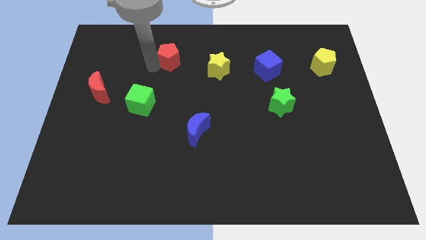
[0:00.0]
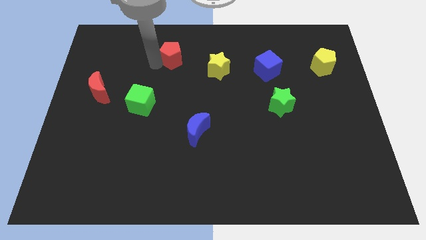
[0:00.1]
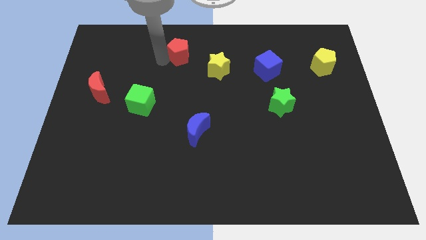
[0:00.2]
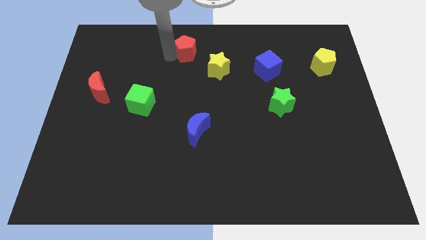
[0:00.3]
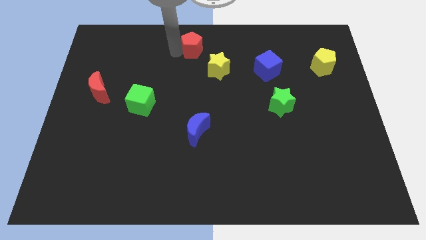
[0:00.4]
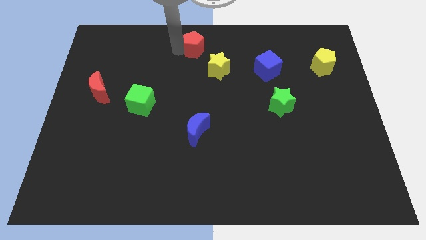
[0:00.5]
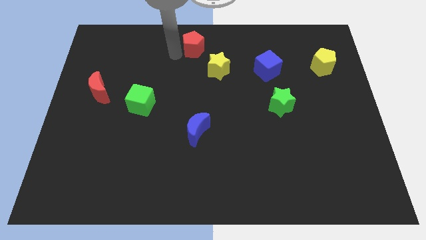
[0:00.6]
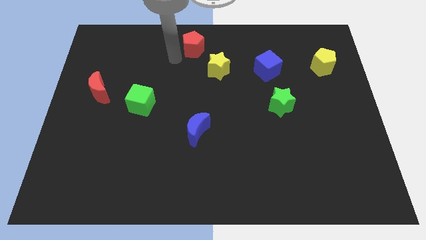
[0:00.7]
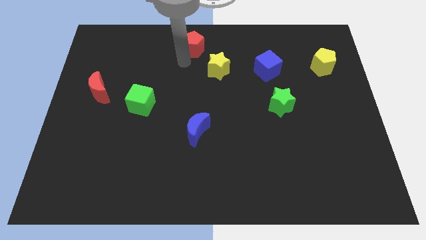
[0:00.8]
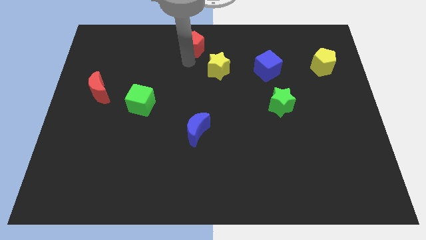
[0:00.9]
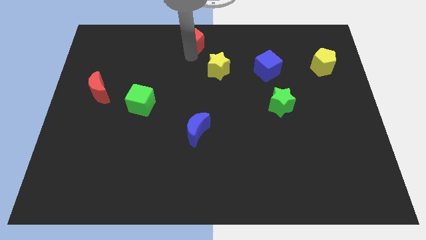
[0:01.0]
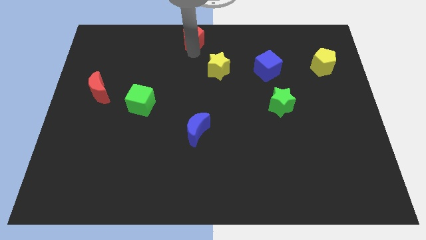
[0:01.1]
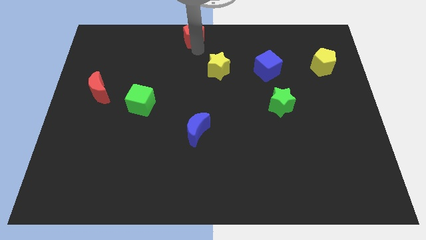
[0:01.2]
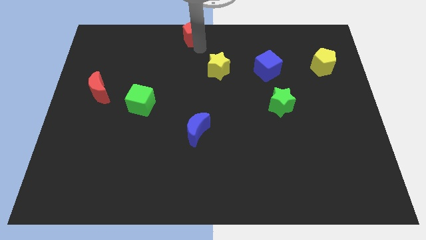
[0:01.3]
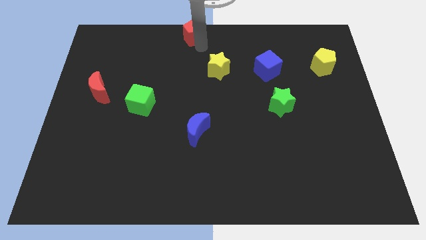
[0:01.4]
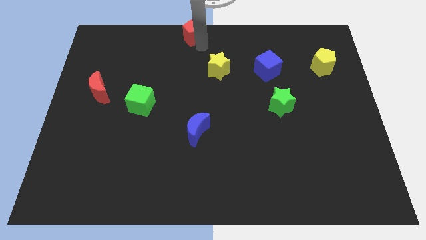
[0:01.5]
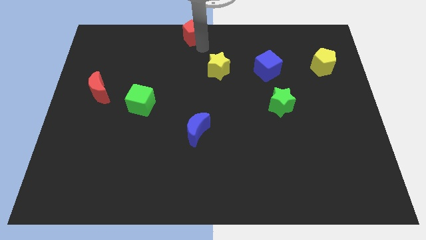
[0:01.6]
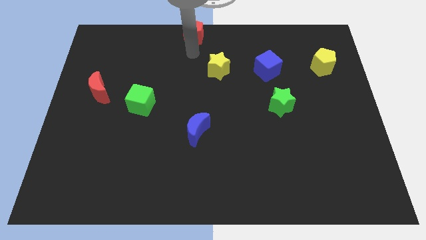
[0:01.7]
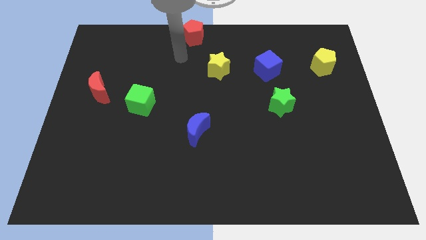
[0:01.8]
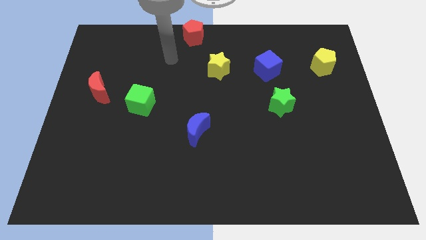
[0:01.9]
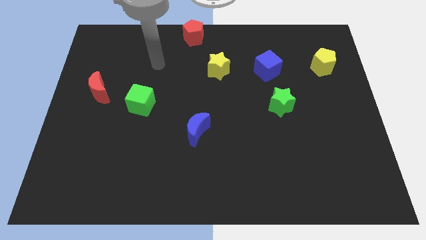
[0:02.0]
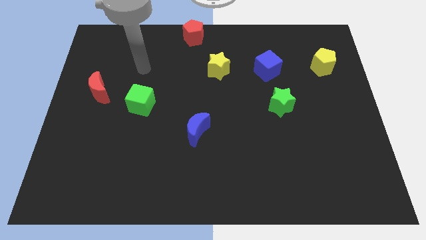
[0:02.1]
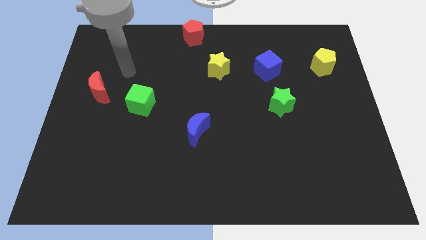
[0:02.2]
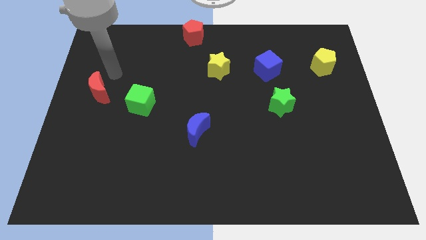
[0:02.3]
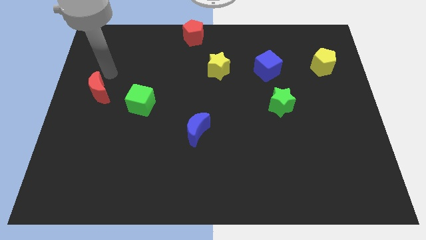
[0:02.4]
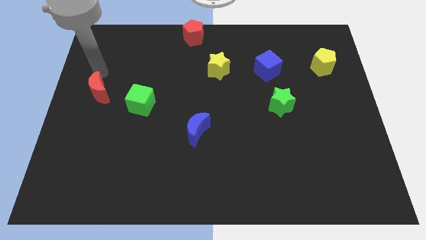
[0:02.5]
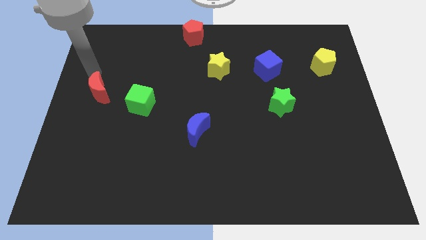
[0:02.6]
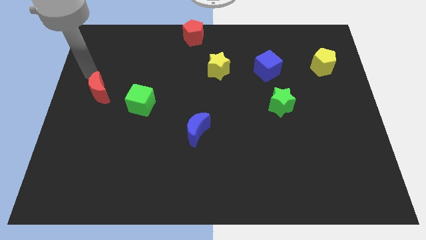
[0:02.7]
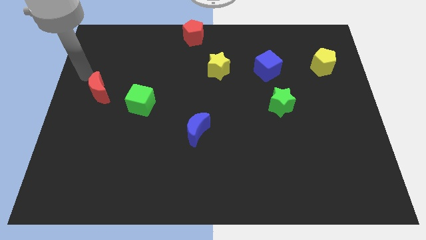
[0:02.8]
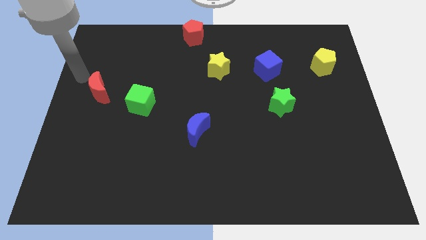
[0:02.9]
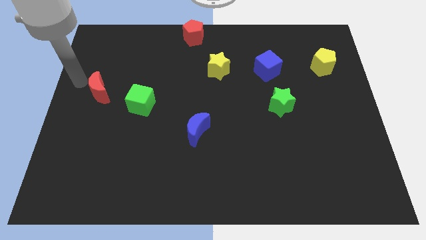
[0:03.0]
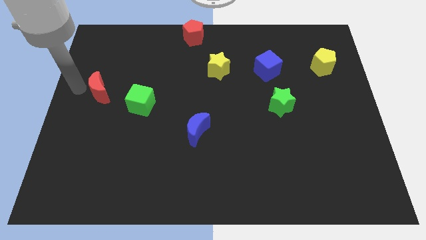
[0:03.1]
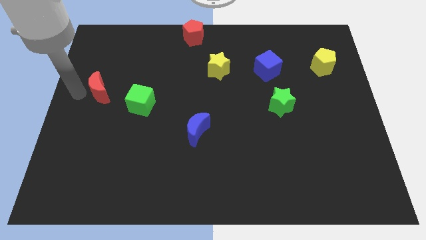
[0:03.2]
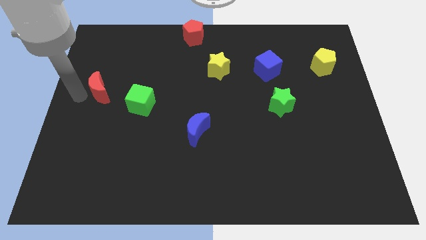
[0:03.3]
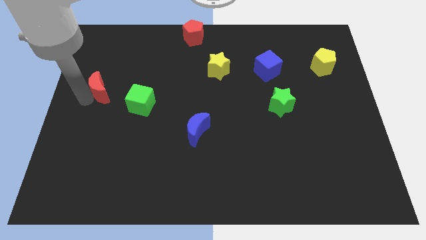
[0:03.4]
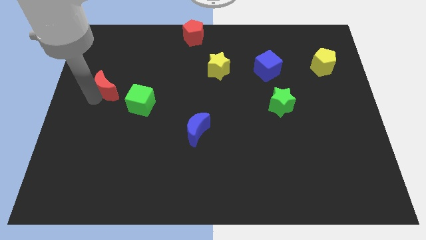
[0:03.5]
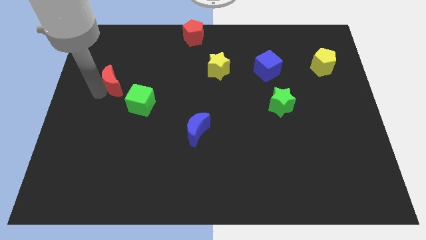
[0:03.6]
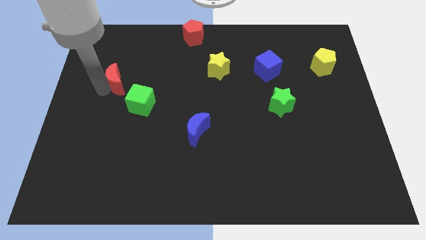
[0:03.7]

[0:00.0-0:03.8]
move the red pentagon to the top center of the board

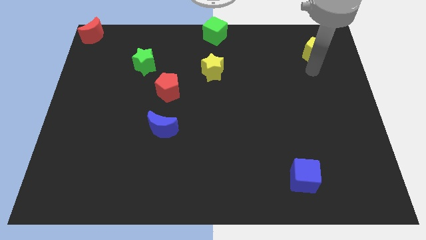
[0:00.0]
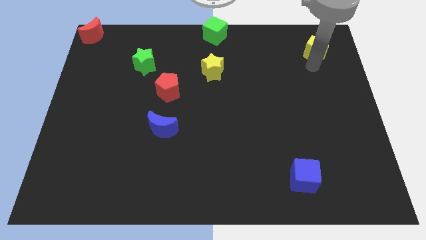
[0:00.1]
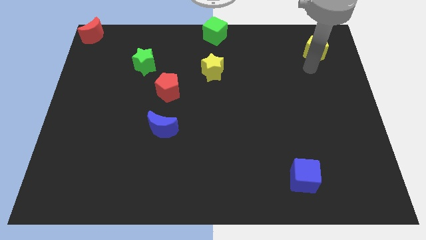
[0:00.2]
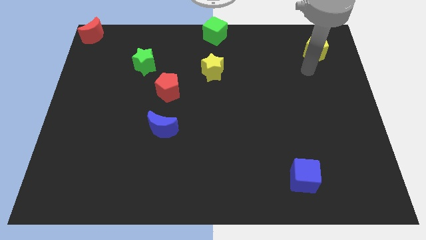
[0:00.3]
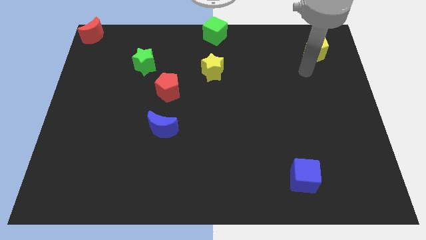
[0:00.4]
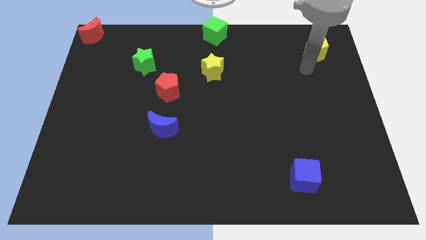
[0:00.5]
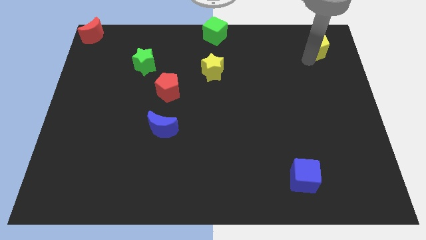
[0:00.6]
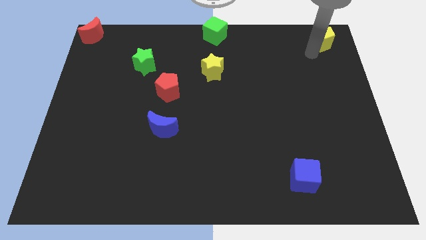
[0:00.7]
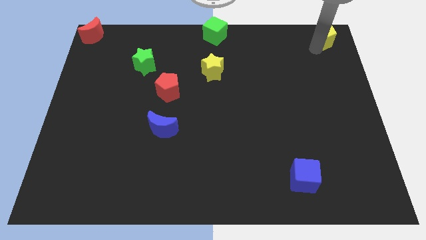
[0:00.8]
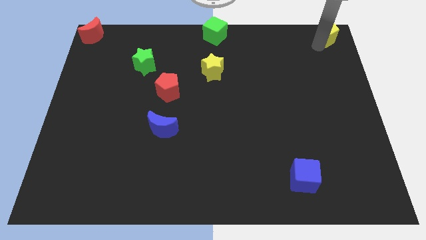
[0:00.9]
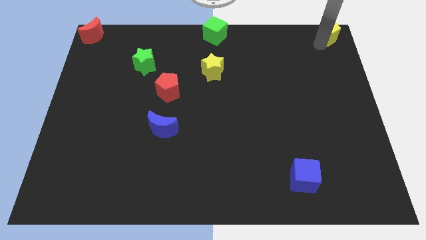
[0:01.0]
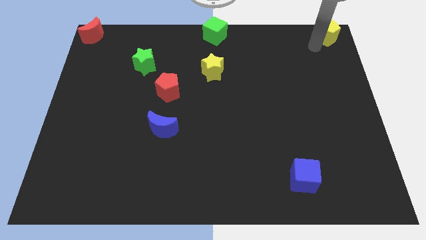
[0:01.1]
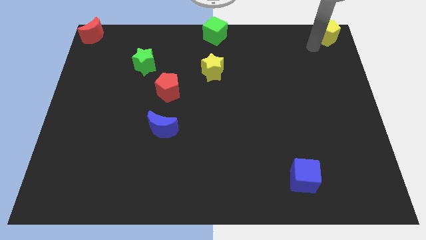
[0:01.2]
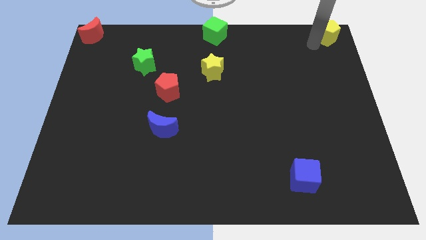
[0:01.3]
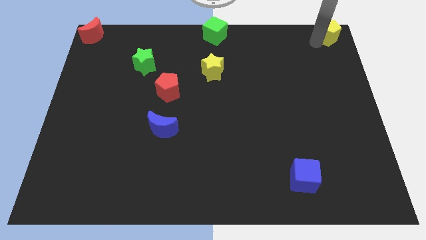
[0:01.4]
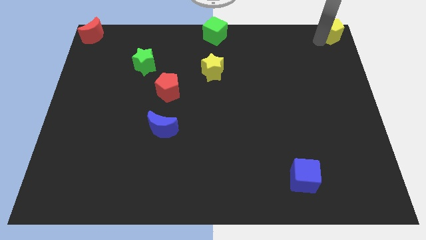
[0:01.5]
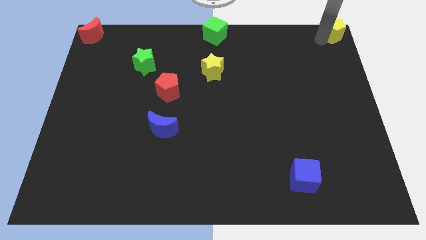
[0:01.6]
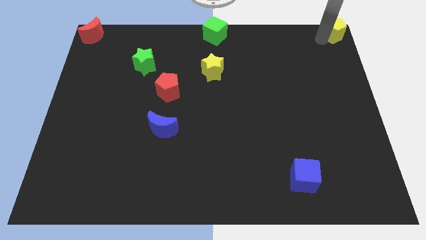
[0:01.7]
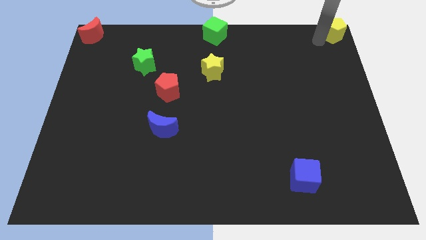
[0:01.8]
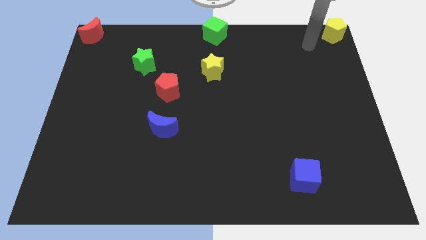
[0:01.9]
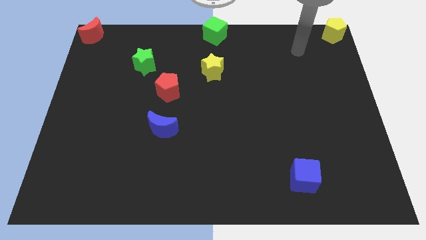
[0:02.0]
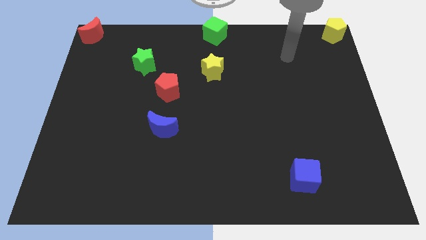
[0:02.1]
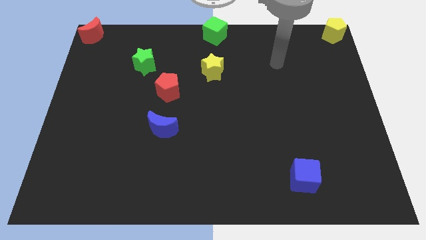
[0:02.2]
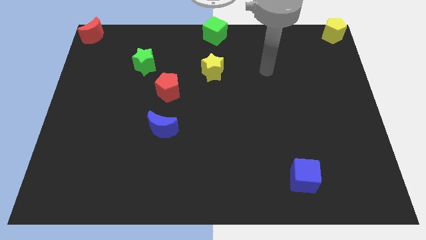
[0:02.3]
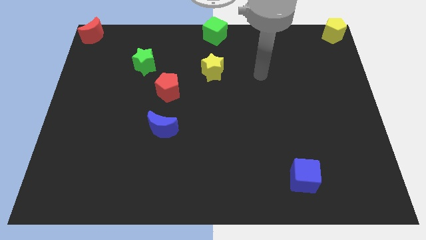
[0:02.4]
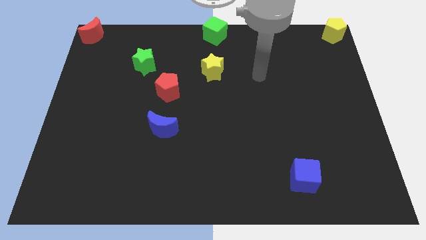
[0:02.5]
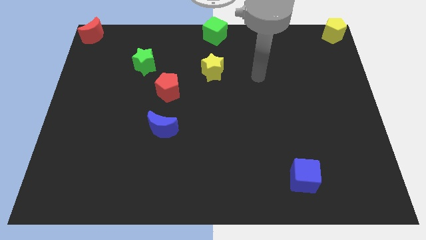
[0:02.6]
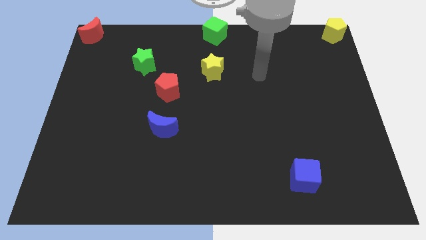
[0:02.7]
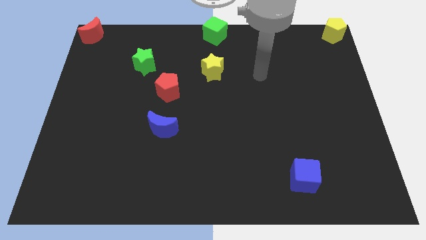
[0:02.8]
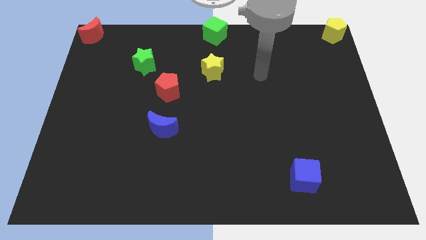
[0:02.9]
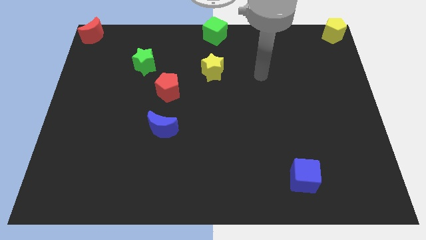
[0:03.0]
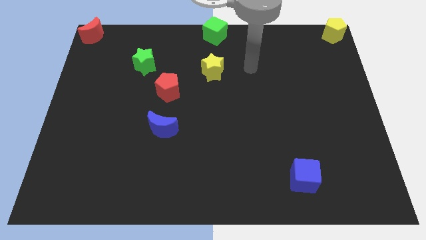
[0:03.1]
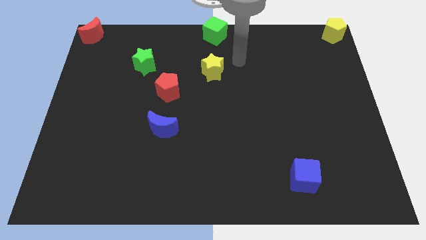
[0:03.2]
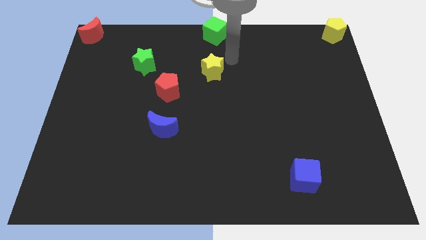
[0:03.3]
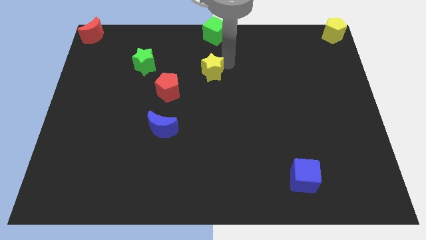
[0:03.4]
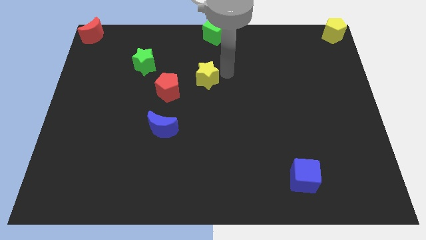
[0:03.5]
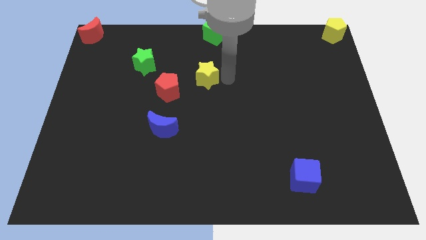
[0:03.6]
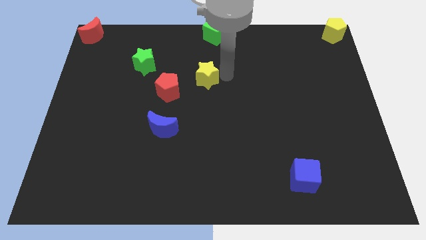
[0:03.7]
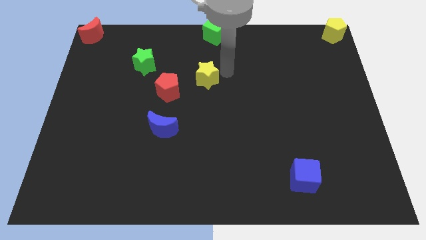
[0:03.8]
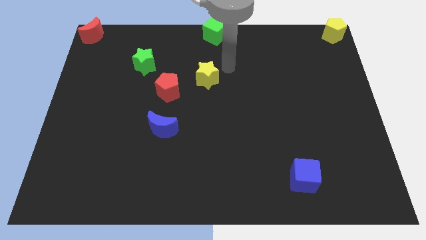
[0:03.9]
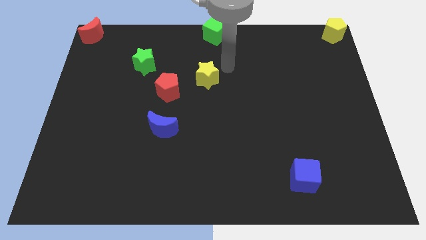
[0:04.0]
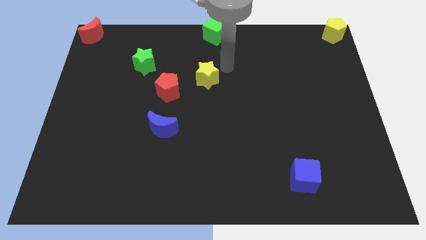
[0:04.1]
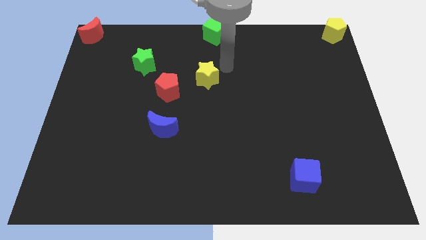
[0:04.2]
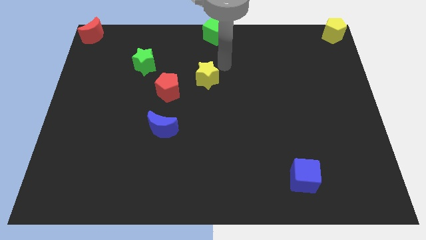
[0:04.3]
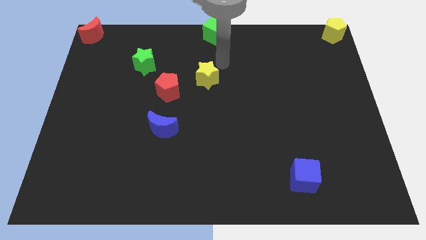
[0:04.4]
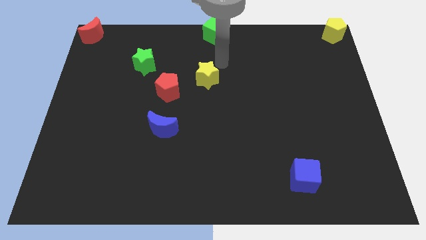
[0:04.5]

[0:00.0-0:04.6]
place the yellow pentagon at the top right corner of the board

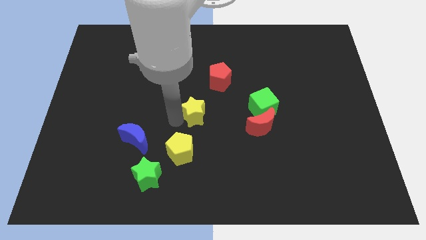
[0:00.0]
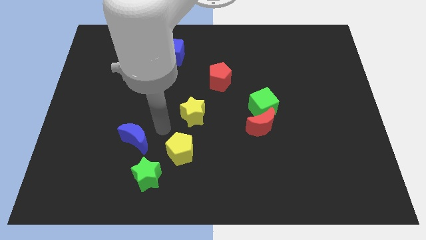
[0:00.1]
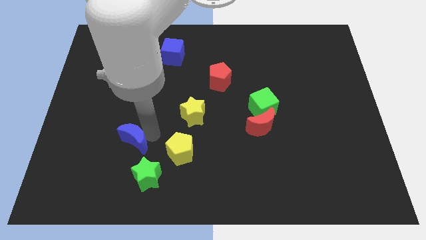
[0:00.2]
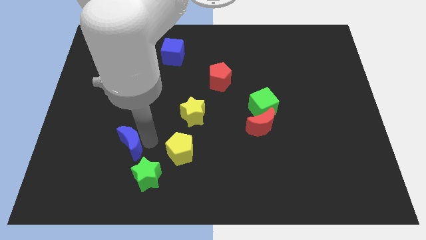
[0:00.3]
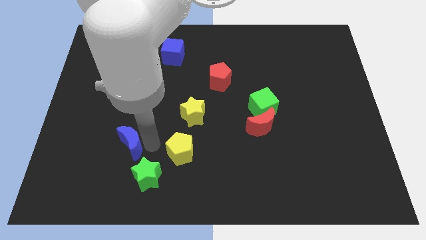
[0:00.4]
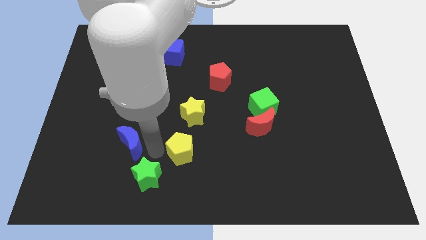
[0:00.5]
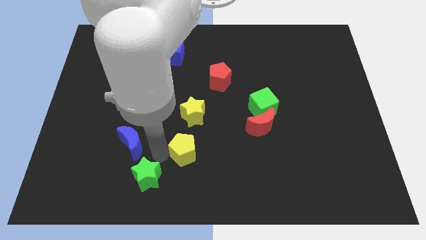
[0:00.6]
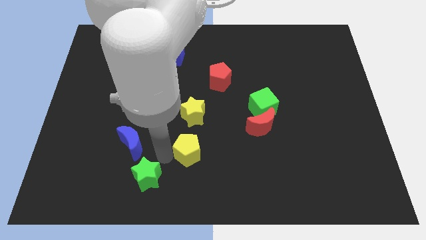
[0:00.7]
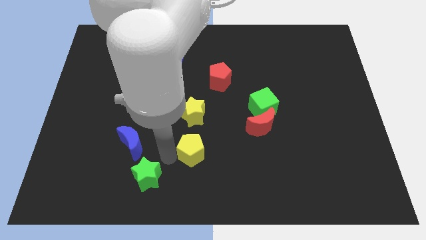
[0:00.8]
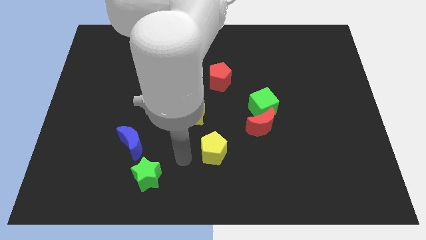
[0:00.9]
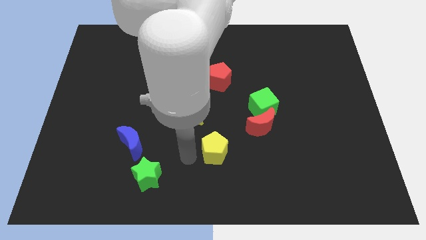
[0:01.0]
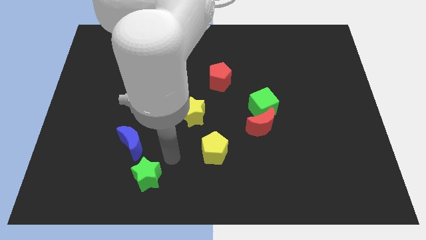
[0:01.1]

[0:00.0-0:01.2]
tap the blue moon and yellow pentagon
